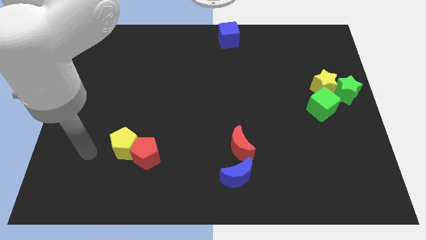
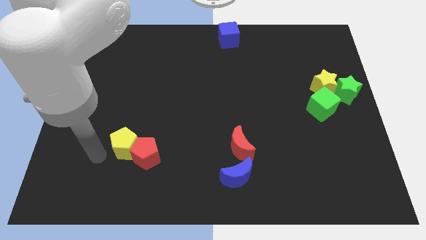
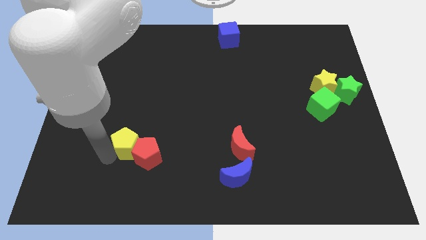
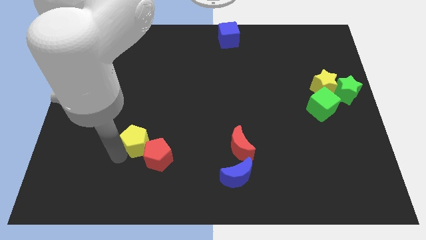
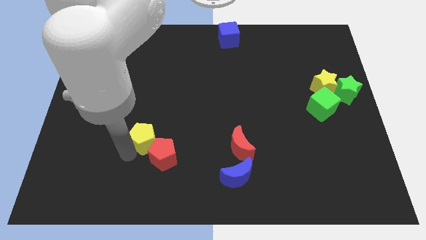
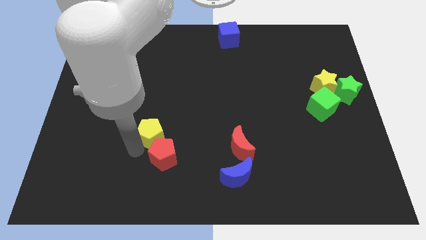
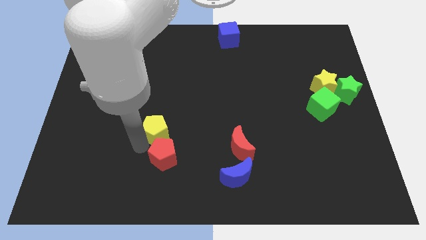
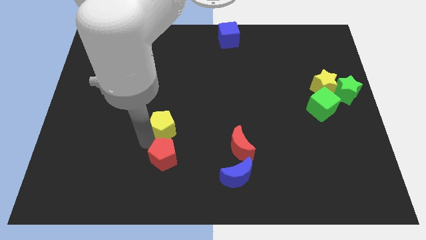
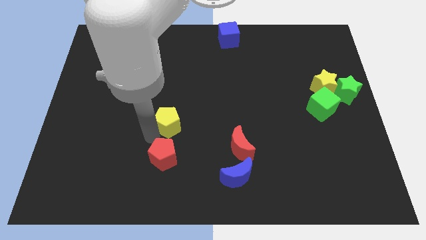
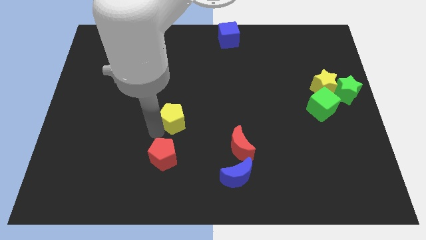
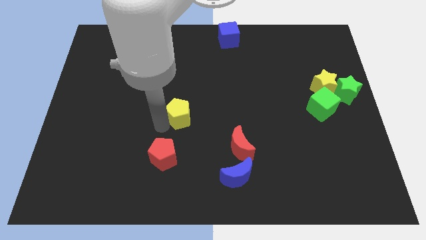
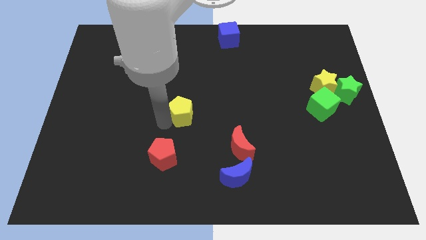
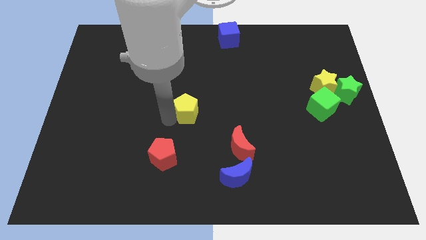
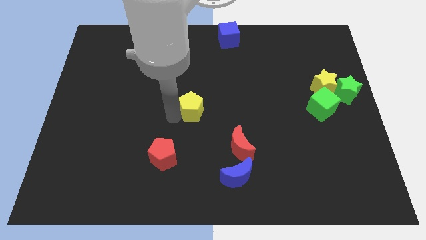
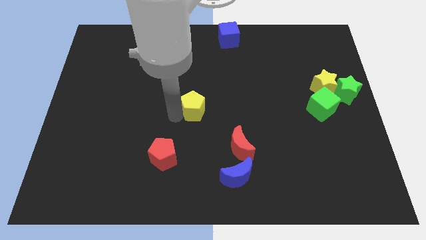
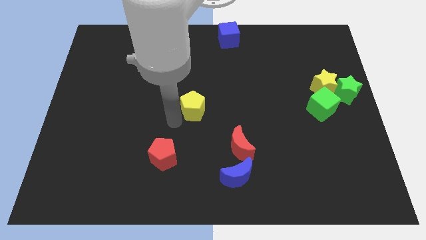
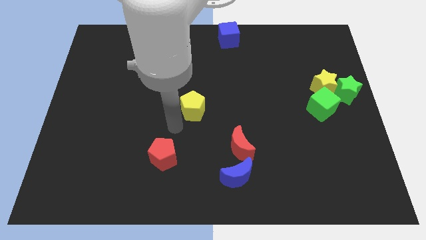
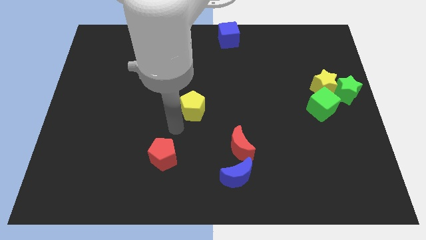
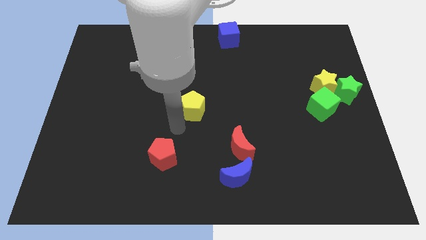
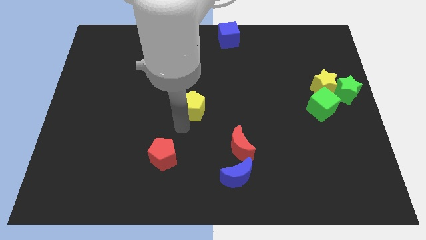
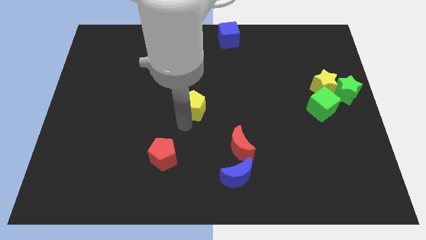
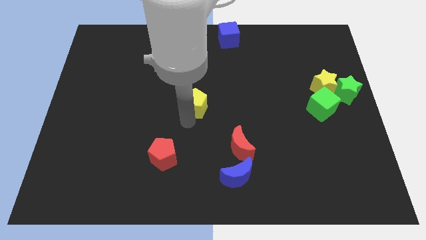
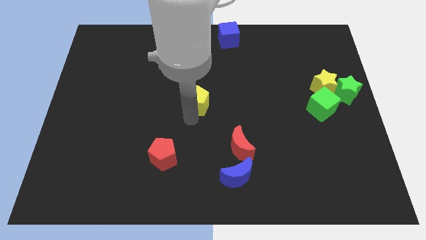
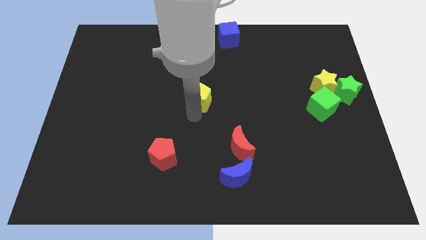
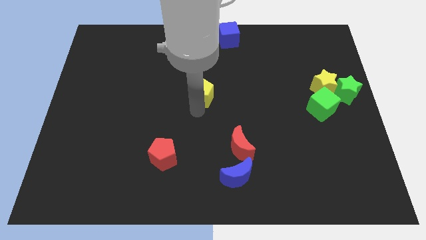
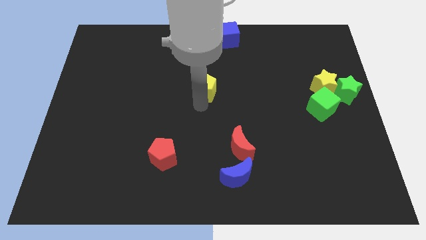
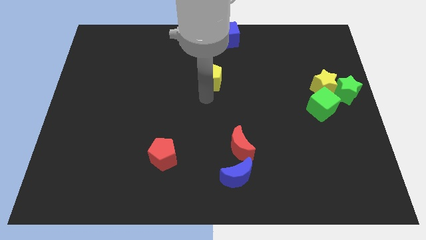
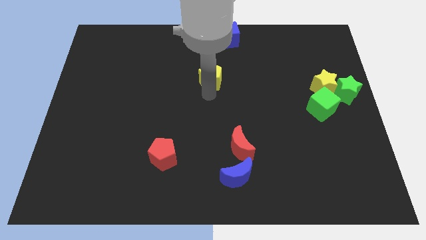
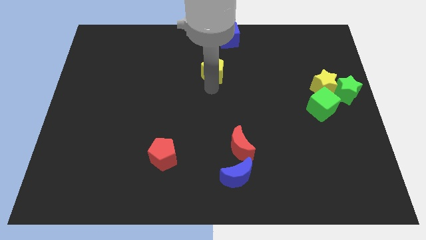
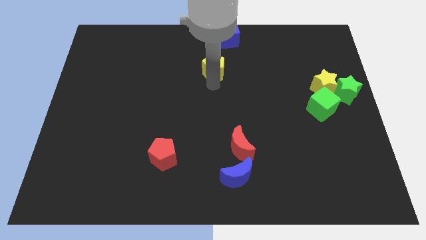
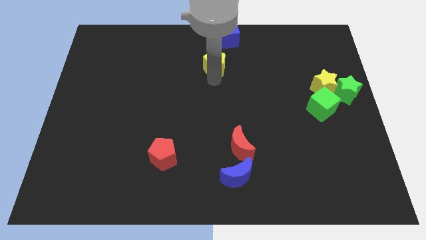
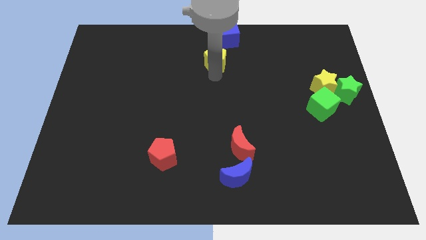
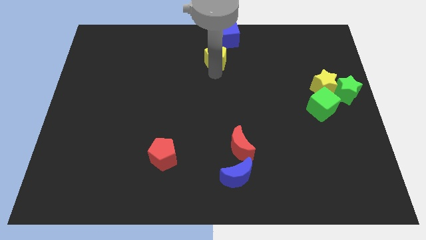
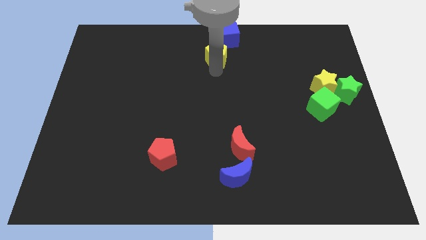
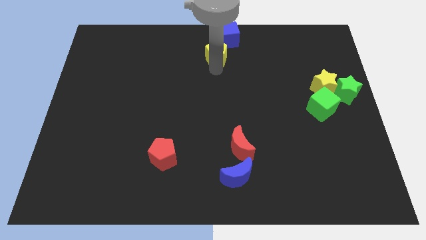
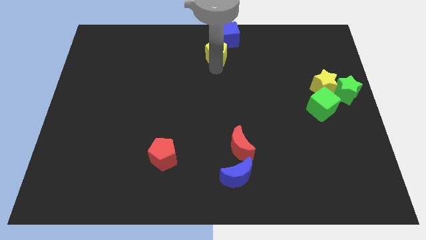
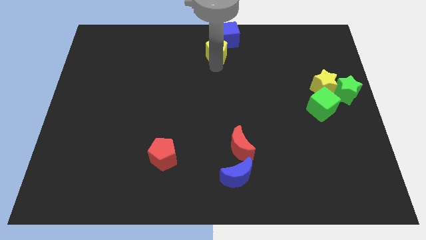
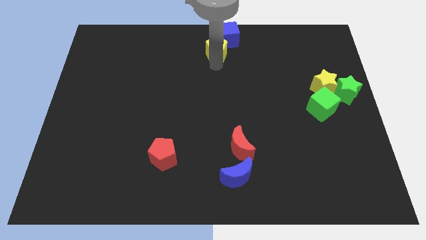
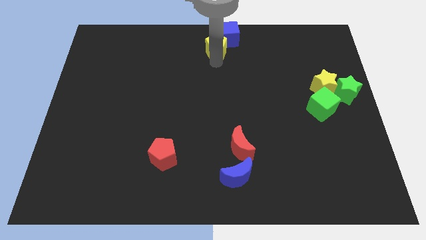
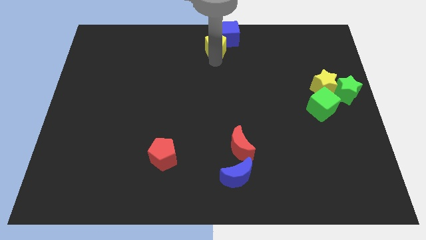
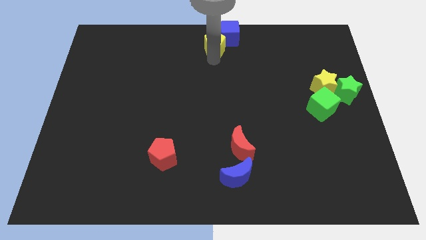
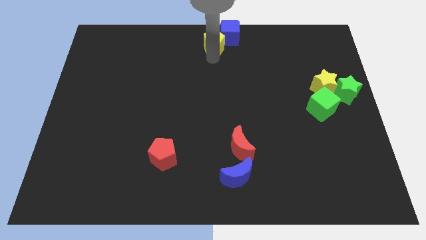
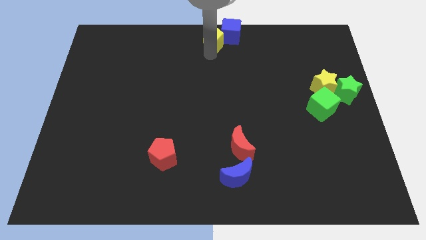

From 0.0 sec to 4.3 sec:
slide the yellow pentagon into the blue cube

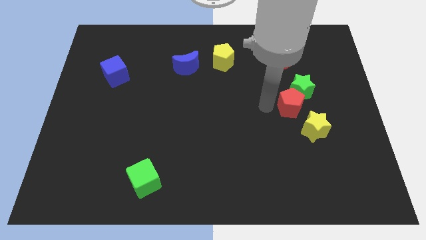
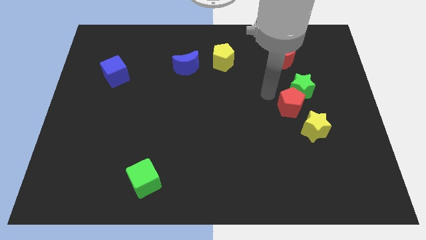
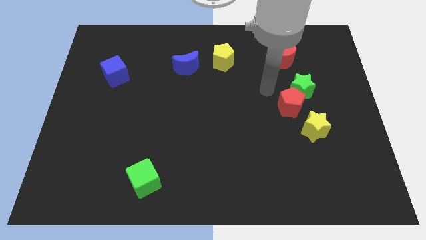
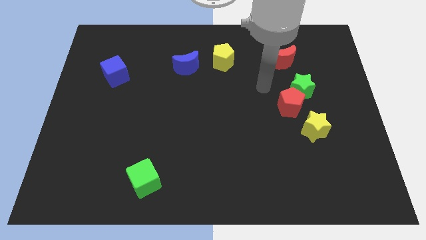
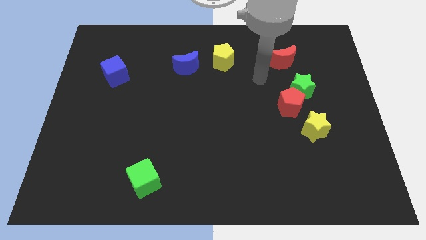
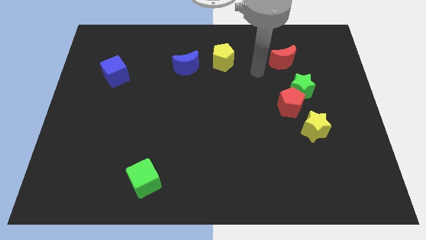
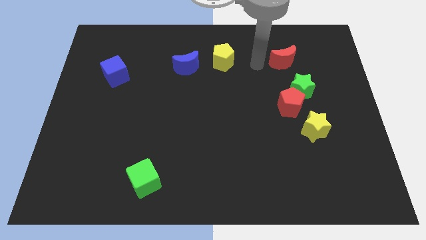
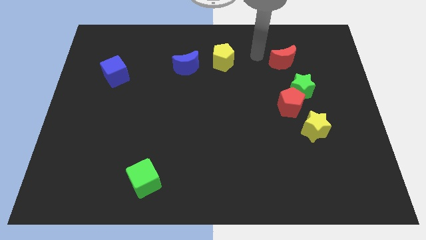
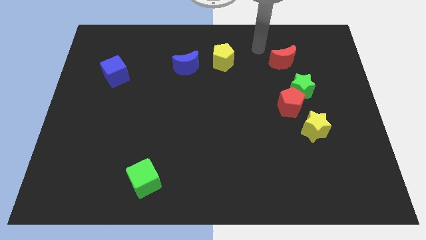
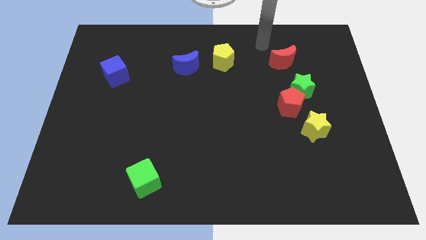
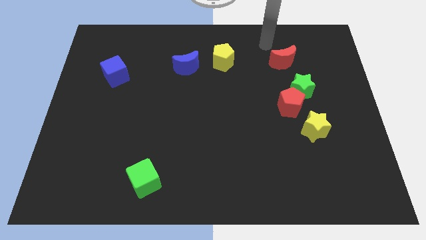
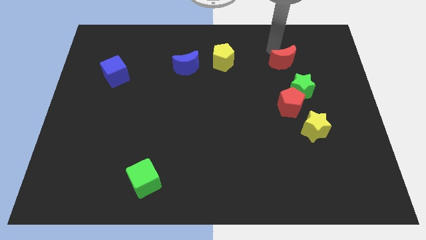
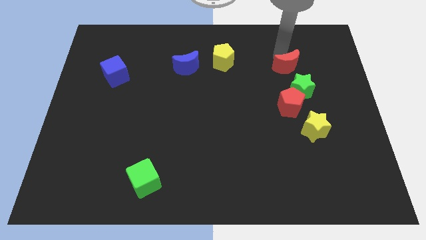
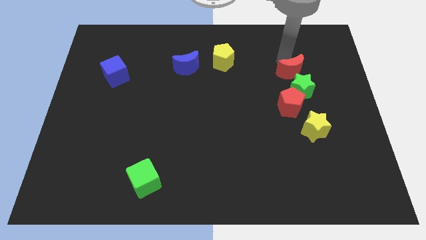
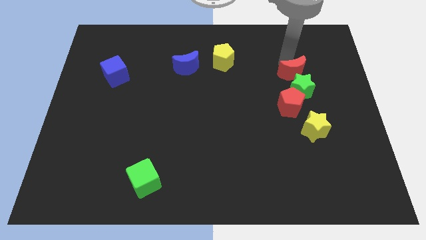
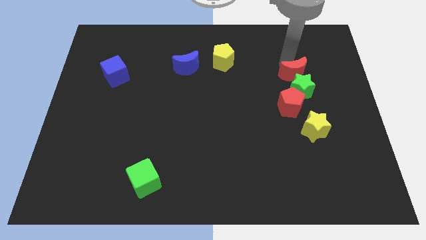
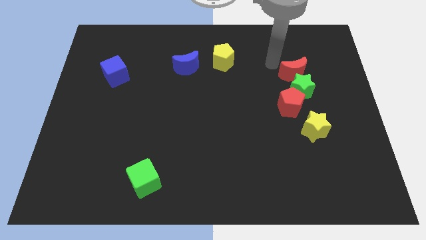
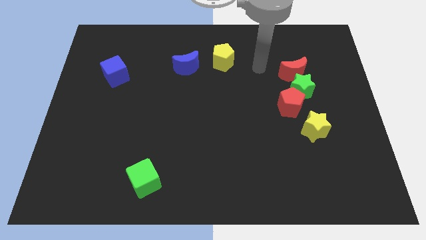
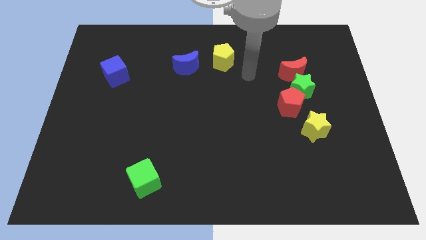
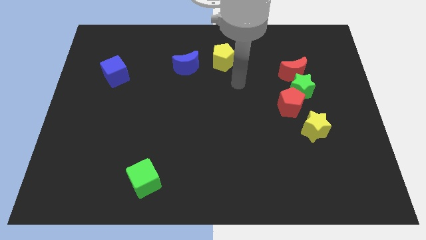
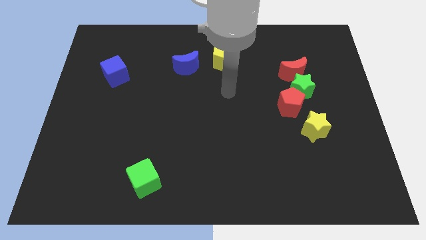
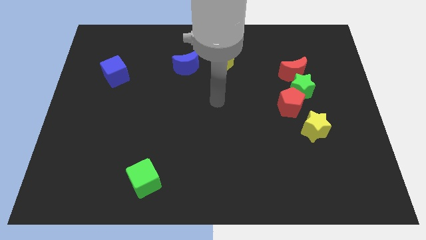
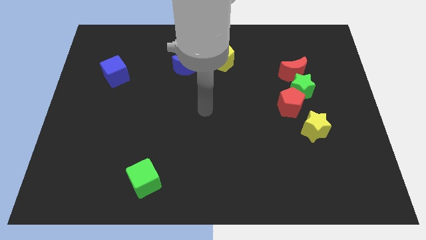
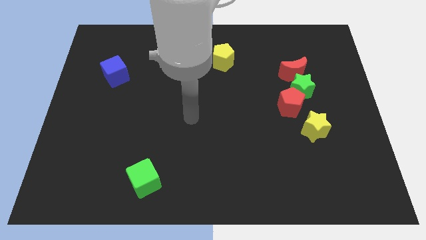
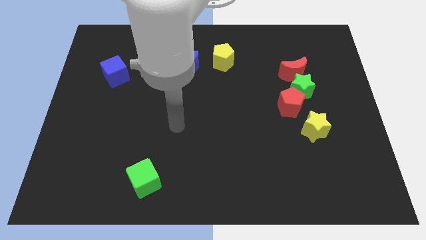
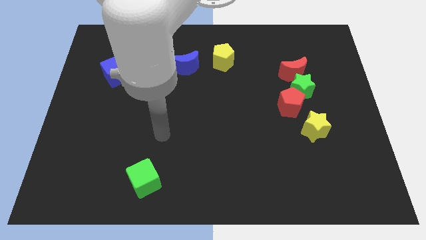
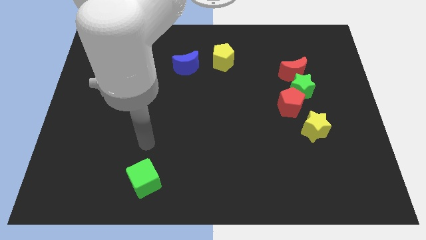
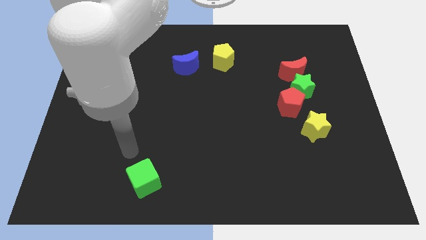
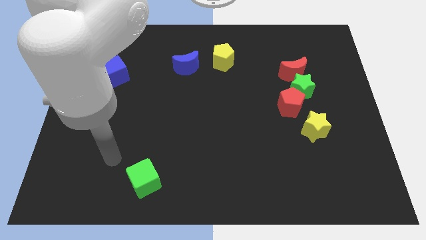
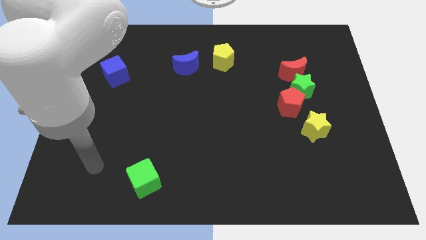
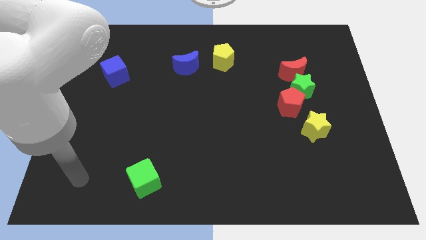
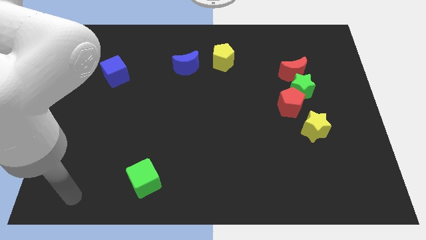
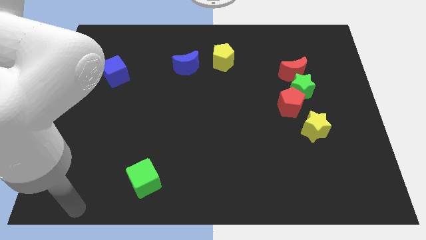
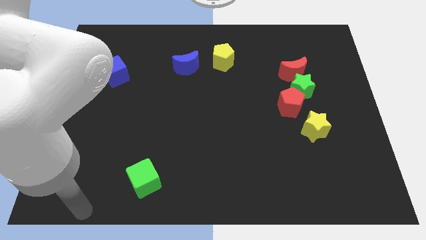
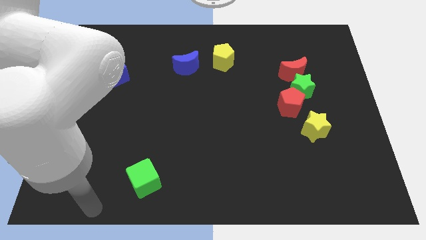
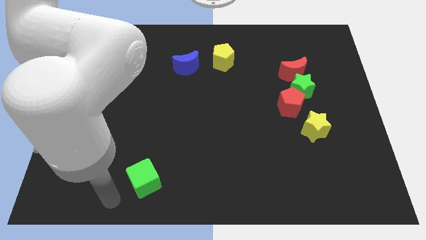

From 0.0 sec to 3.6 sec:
push the red crescent above the green star

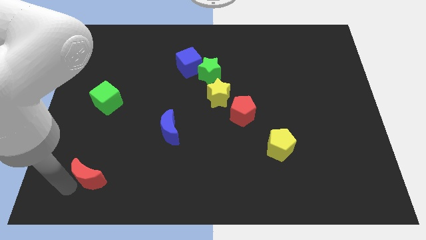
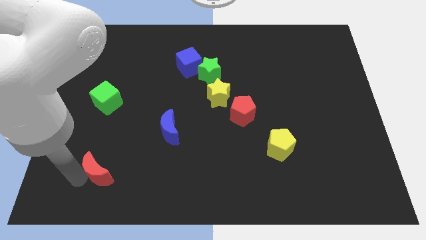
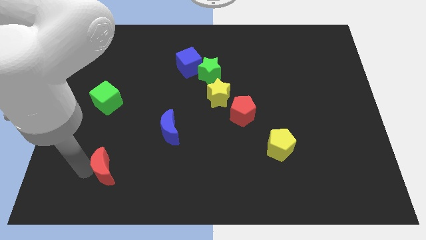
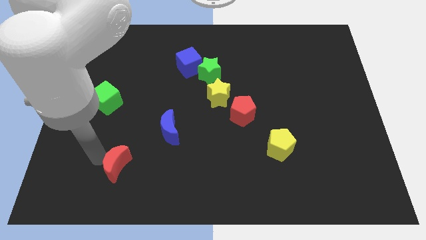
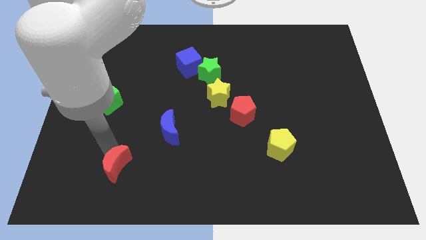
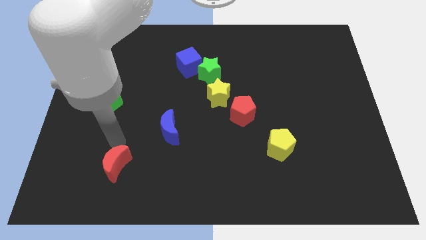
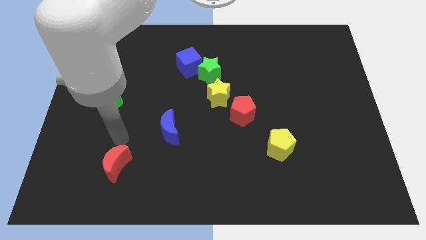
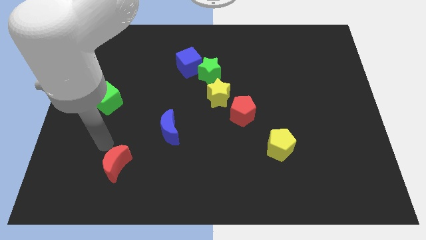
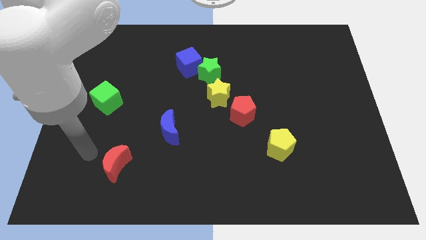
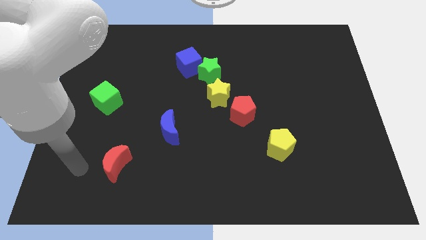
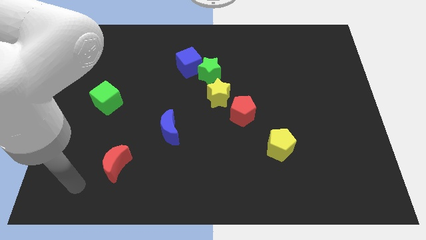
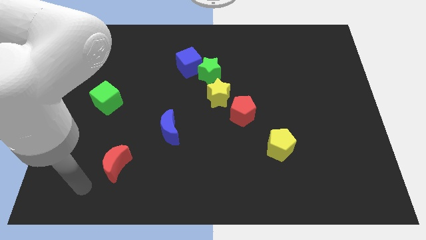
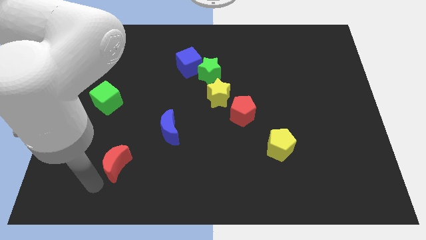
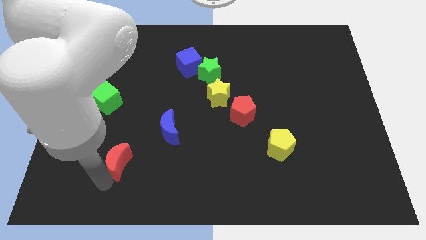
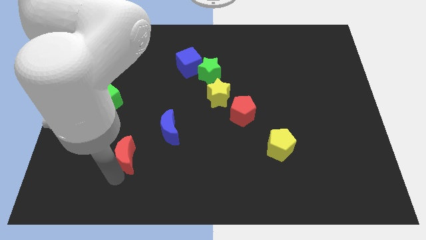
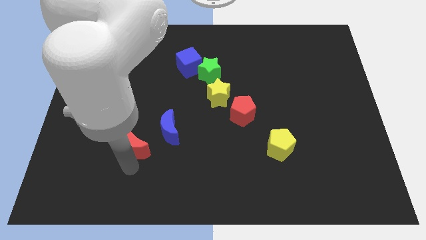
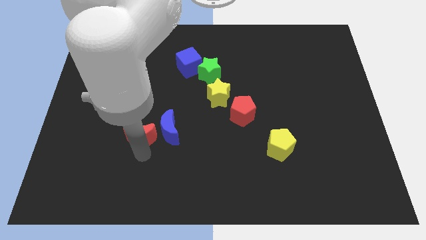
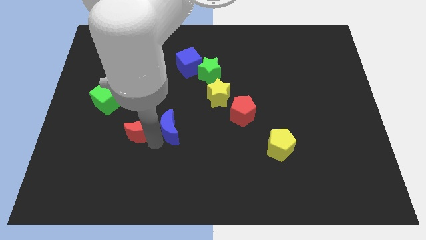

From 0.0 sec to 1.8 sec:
push the red crescent to the left of the blue crescent
